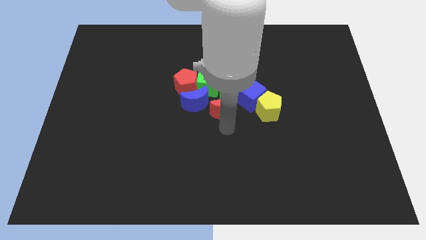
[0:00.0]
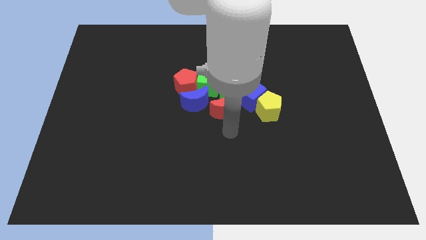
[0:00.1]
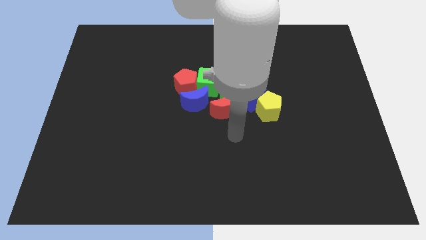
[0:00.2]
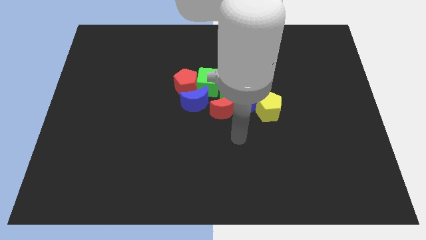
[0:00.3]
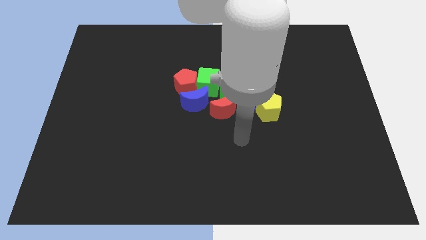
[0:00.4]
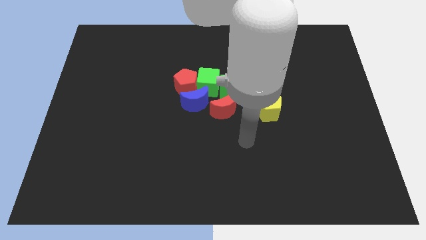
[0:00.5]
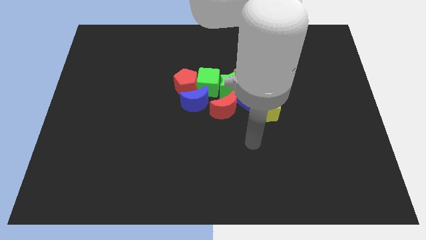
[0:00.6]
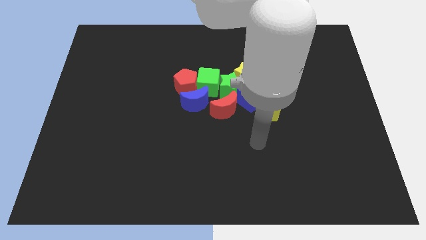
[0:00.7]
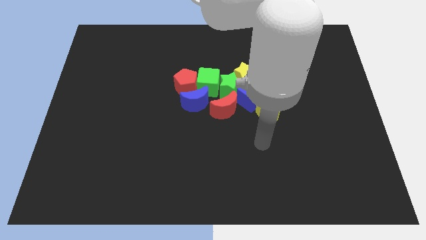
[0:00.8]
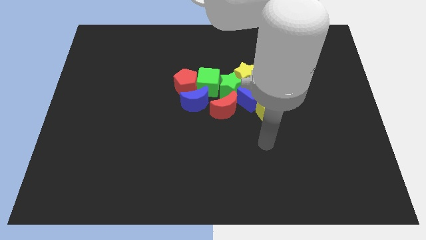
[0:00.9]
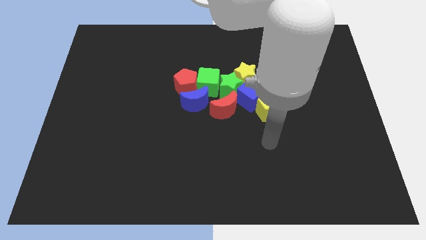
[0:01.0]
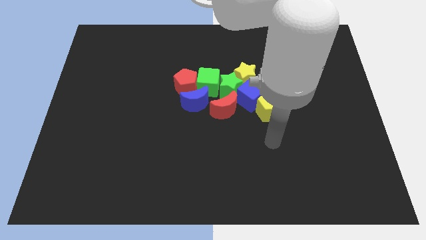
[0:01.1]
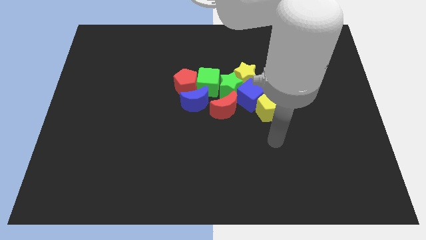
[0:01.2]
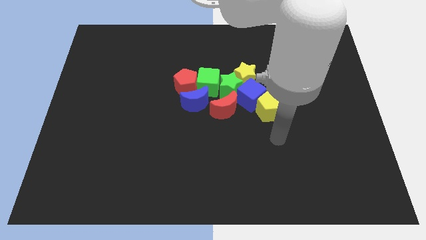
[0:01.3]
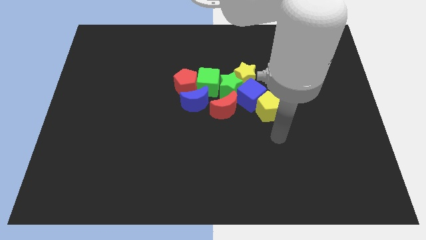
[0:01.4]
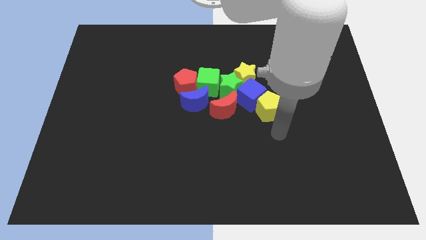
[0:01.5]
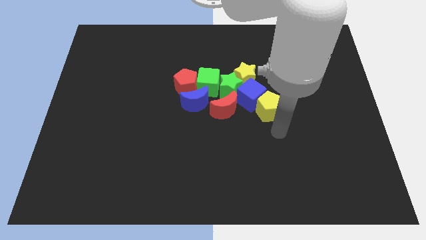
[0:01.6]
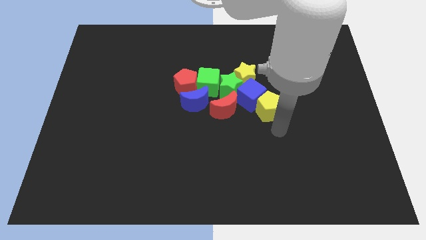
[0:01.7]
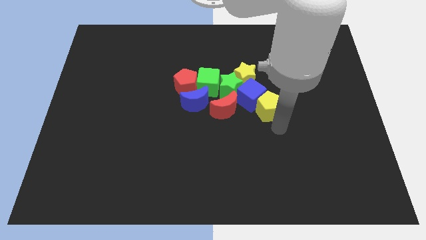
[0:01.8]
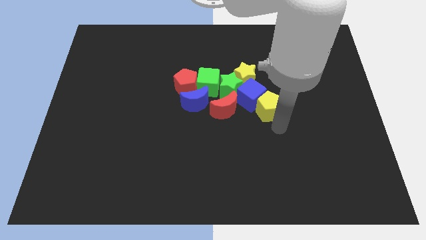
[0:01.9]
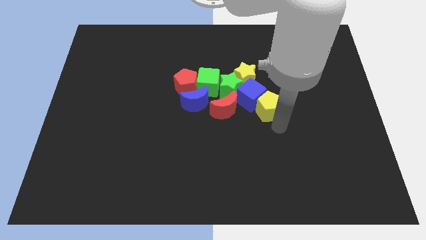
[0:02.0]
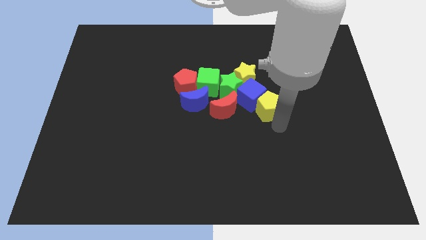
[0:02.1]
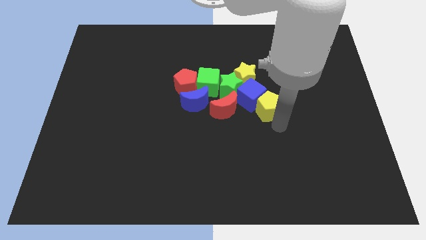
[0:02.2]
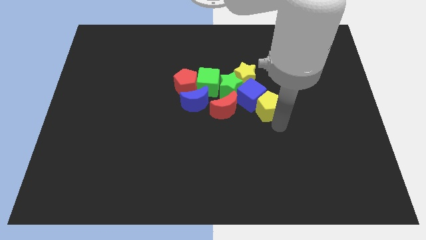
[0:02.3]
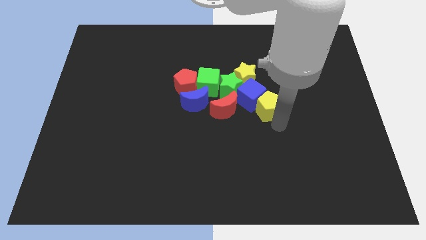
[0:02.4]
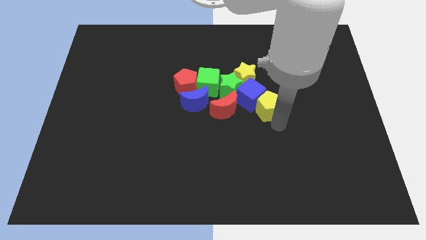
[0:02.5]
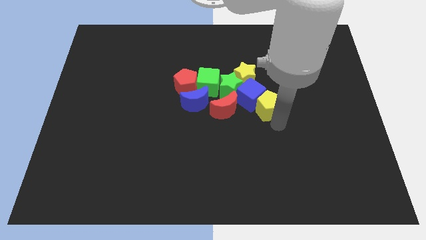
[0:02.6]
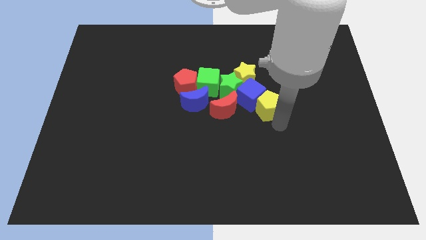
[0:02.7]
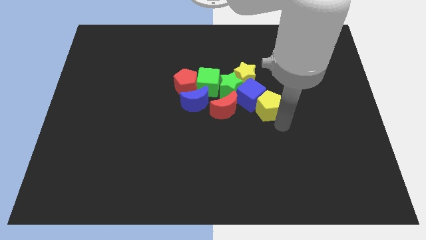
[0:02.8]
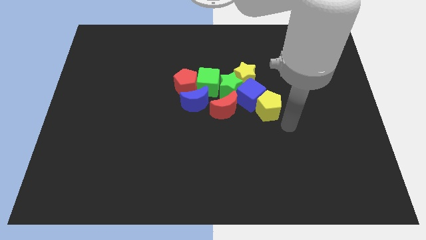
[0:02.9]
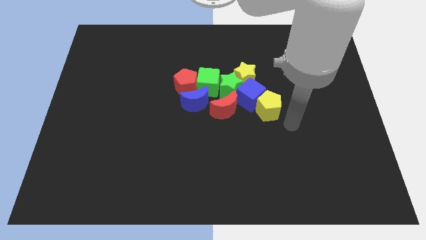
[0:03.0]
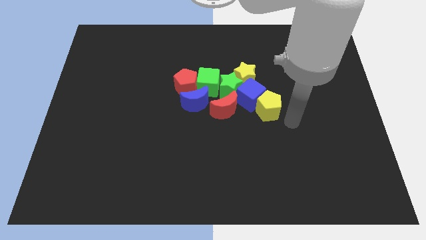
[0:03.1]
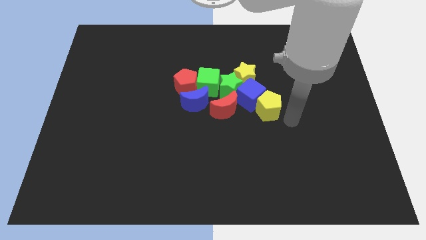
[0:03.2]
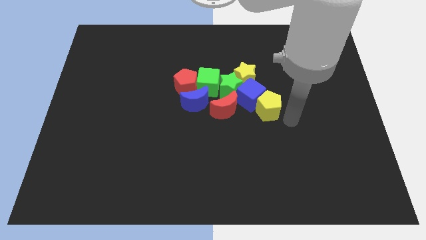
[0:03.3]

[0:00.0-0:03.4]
move your arm close to the yellow pentagon

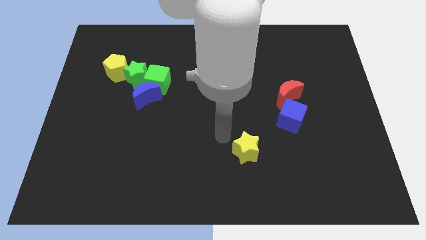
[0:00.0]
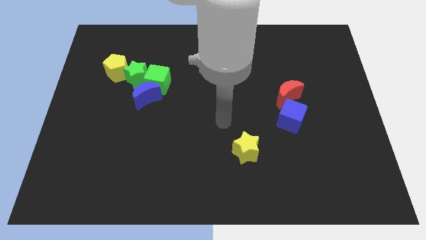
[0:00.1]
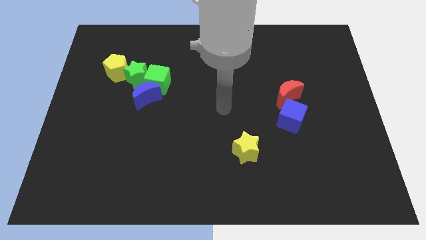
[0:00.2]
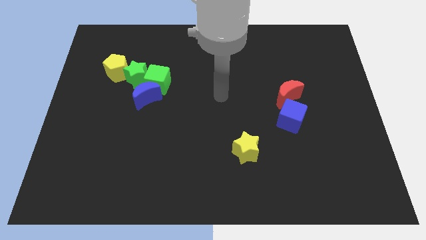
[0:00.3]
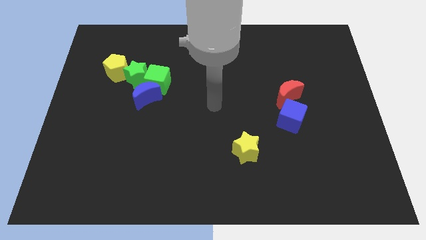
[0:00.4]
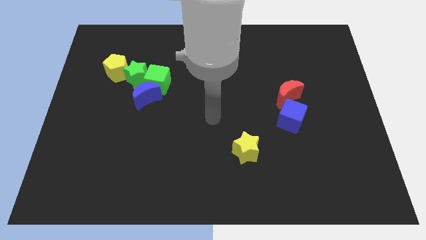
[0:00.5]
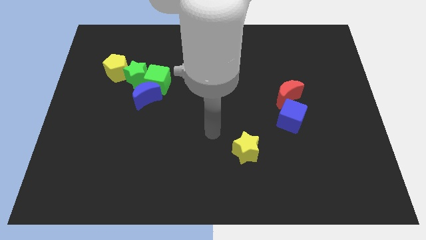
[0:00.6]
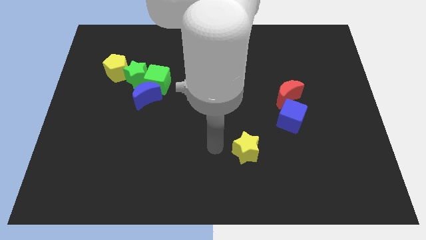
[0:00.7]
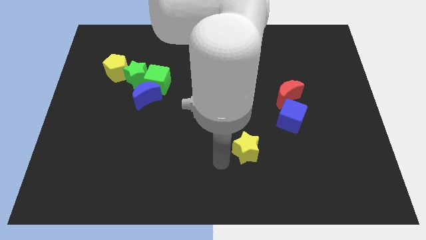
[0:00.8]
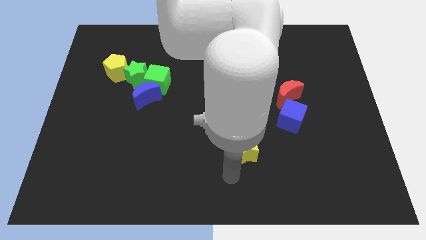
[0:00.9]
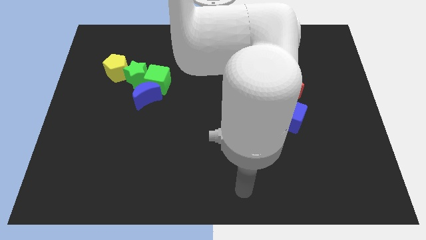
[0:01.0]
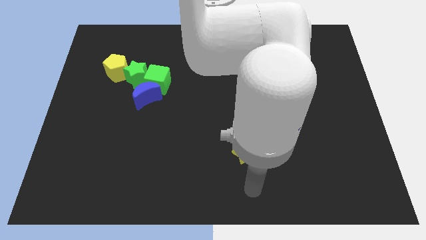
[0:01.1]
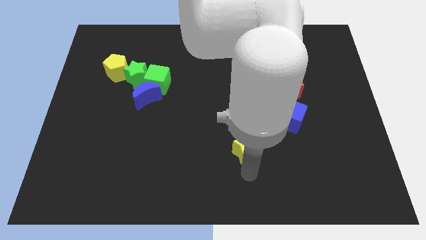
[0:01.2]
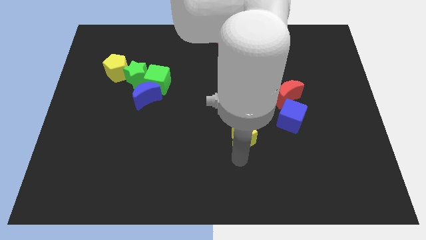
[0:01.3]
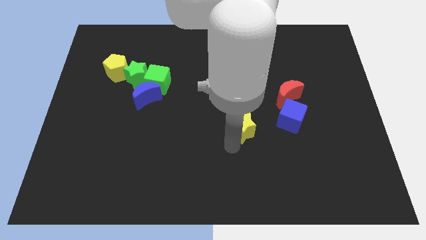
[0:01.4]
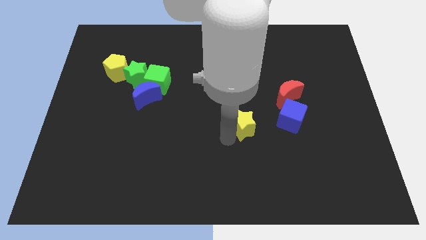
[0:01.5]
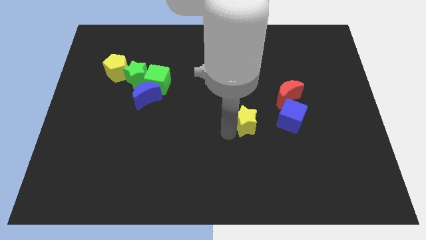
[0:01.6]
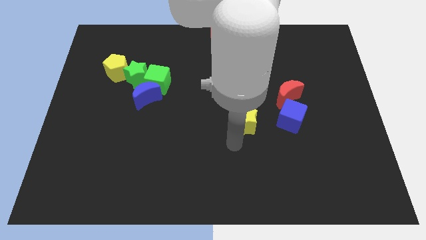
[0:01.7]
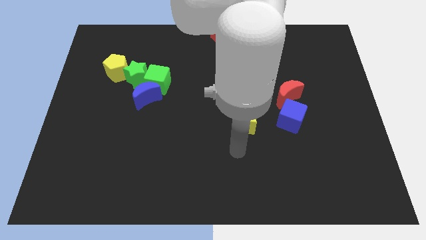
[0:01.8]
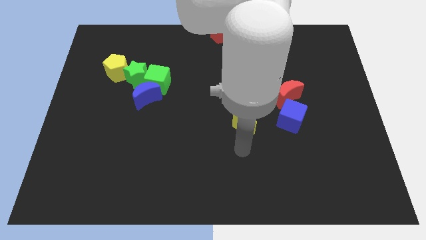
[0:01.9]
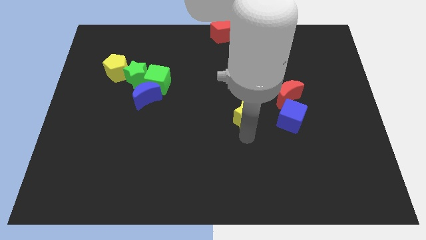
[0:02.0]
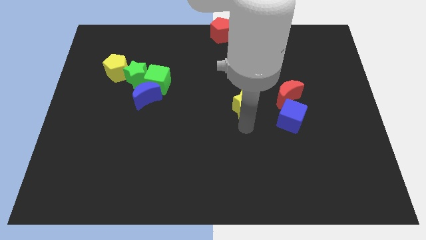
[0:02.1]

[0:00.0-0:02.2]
place the yellow star left to the blue cube
